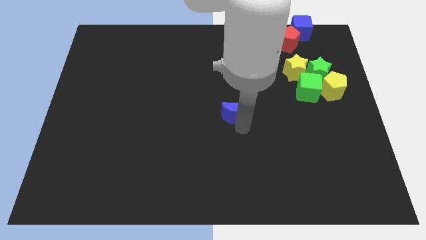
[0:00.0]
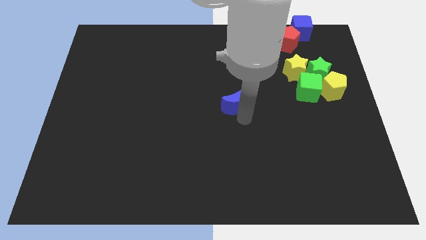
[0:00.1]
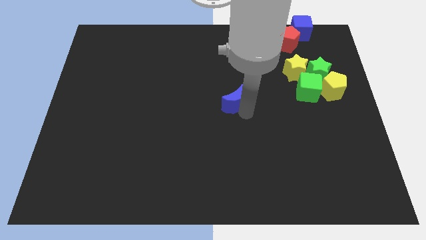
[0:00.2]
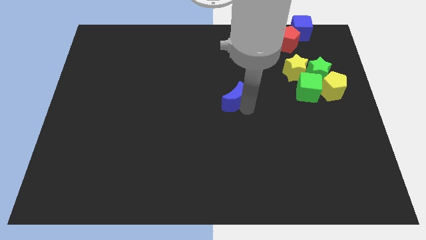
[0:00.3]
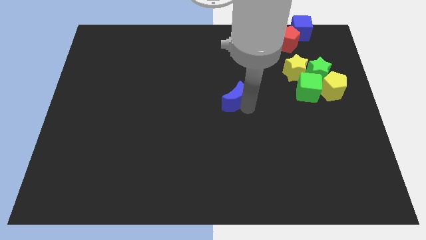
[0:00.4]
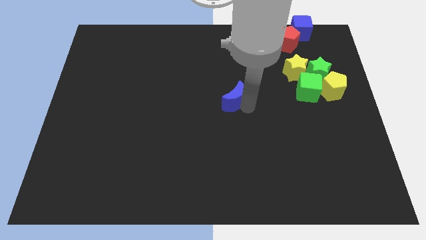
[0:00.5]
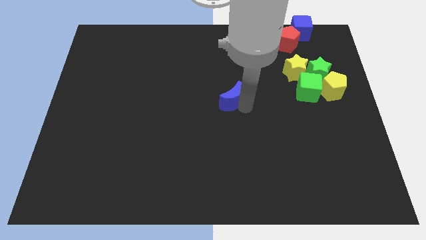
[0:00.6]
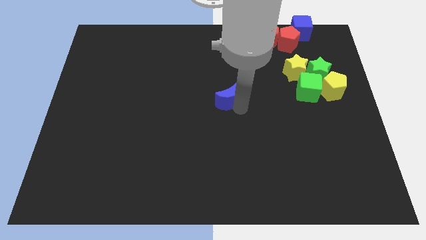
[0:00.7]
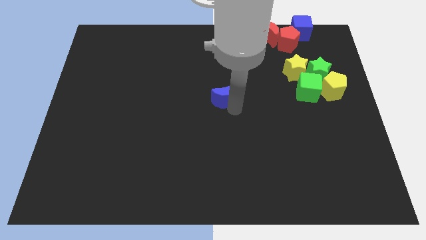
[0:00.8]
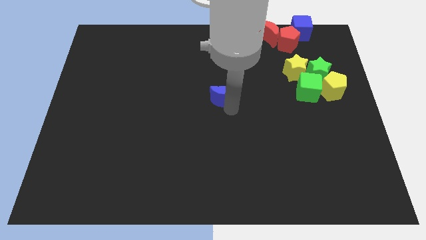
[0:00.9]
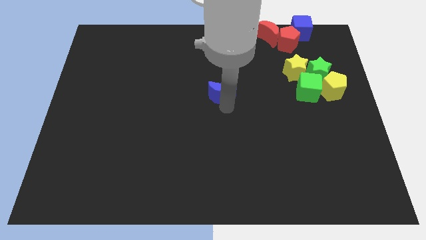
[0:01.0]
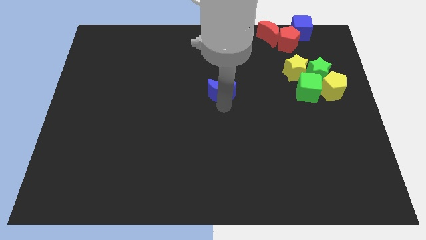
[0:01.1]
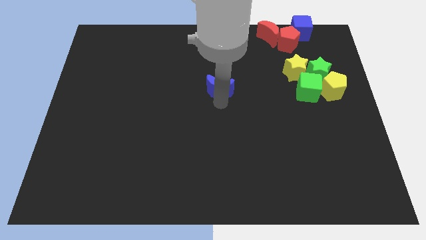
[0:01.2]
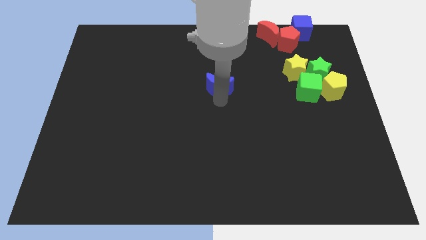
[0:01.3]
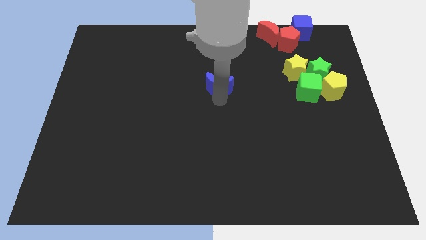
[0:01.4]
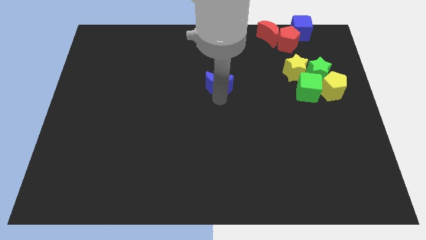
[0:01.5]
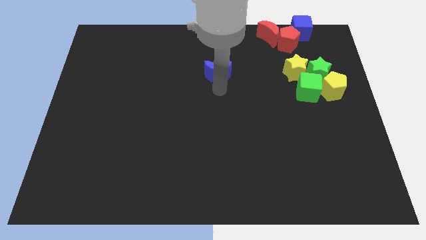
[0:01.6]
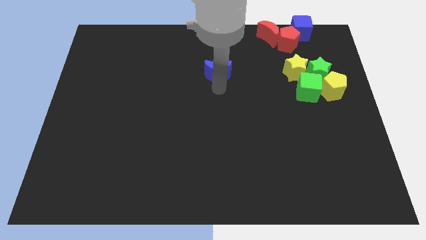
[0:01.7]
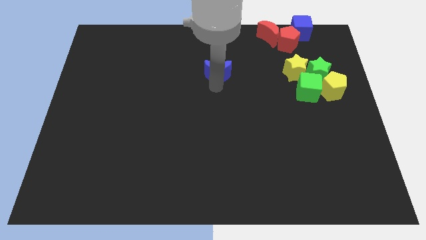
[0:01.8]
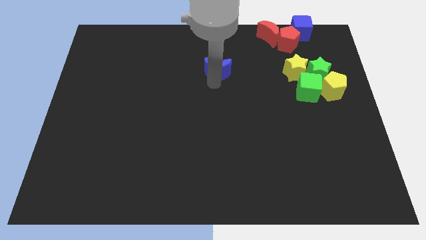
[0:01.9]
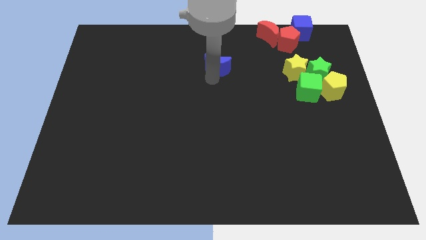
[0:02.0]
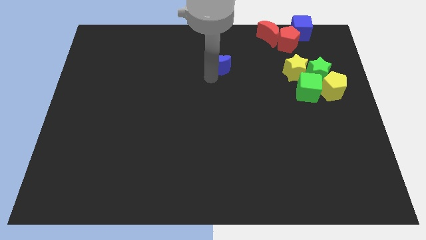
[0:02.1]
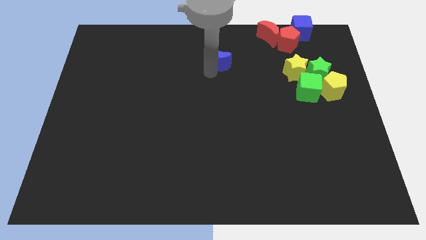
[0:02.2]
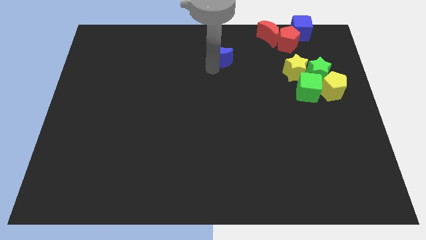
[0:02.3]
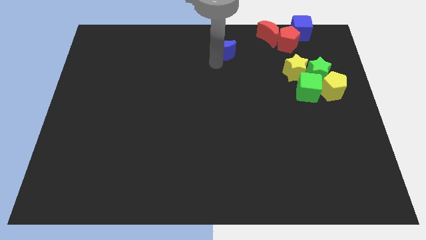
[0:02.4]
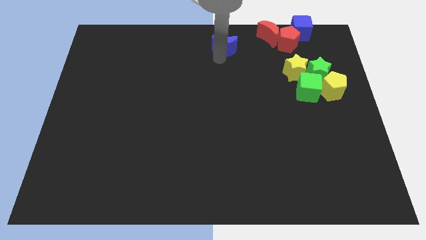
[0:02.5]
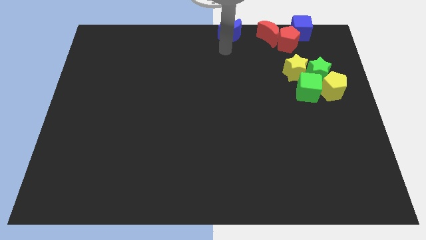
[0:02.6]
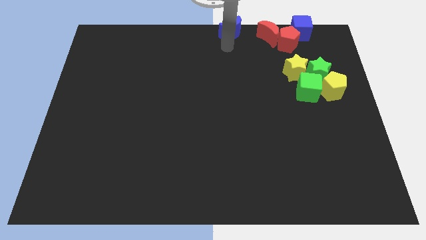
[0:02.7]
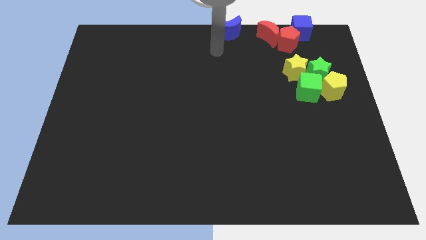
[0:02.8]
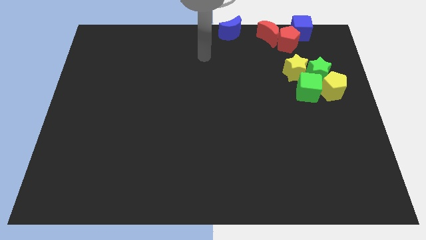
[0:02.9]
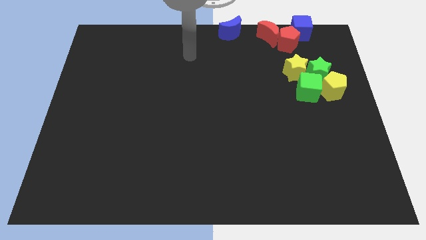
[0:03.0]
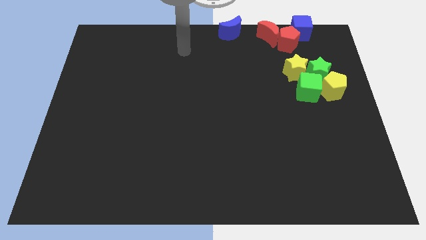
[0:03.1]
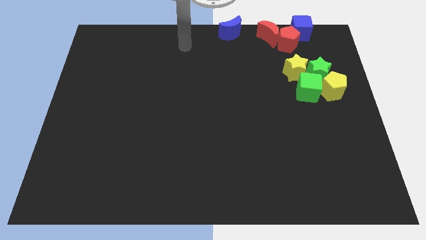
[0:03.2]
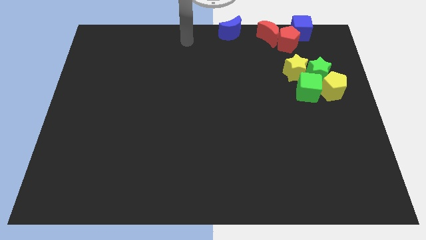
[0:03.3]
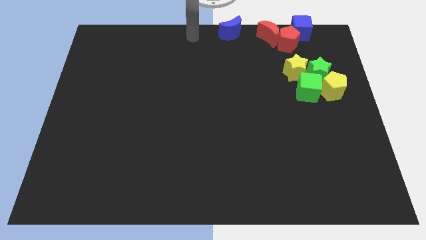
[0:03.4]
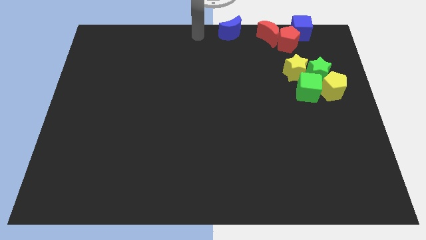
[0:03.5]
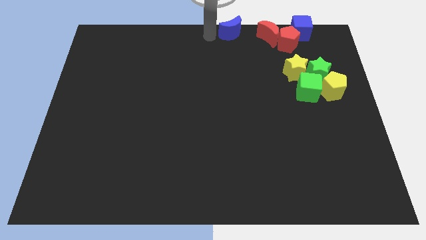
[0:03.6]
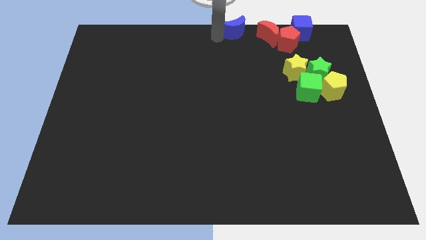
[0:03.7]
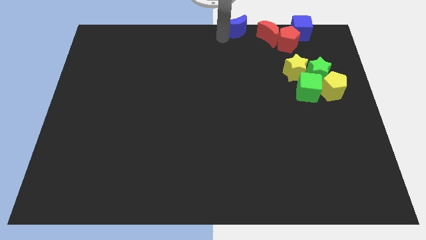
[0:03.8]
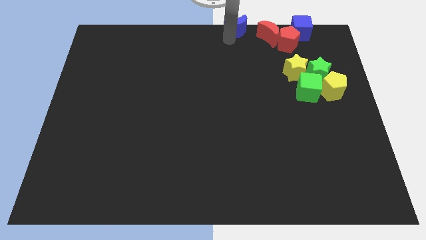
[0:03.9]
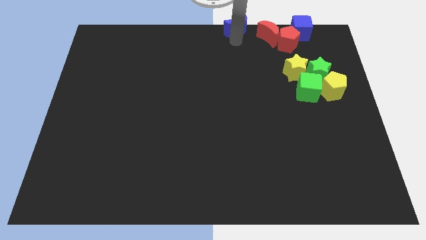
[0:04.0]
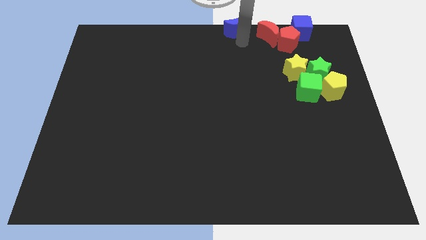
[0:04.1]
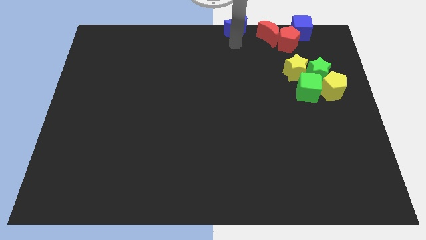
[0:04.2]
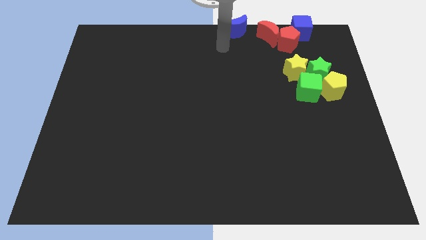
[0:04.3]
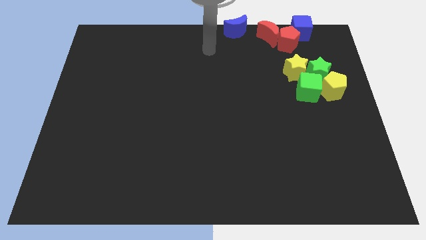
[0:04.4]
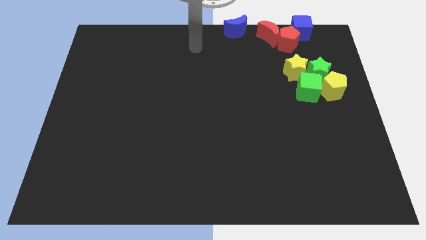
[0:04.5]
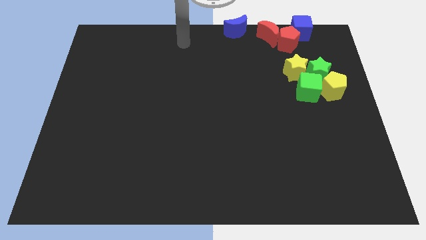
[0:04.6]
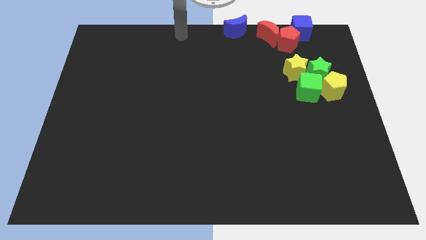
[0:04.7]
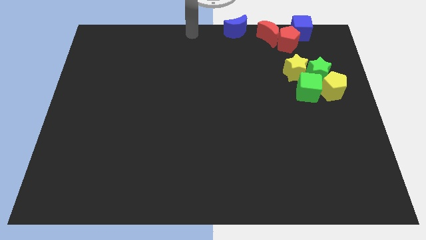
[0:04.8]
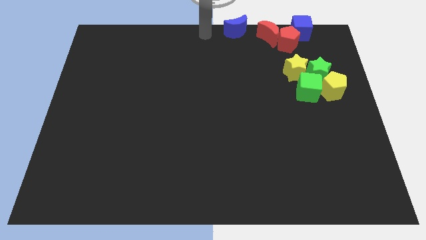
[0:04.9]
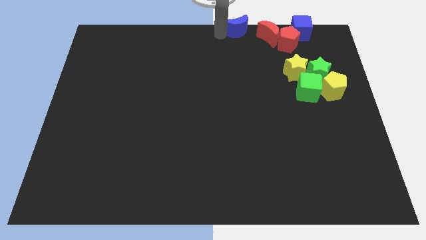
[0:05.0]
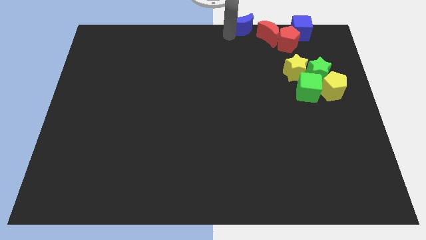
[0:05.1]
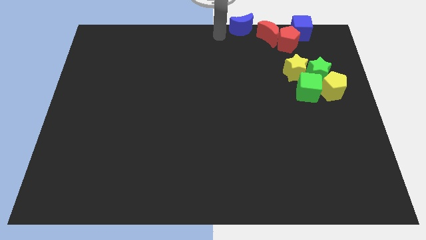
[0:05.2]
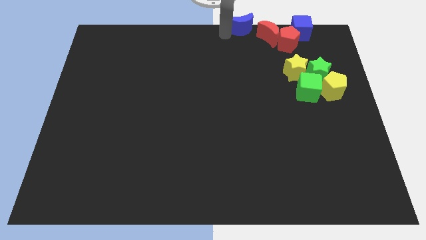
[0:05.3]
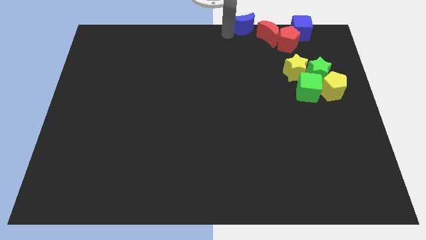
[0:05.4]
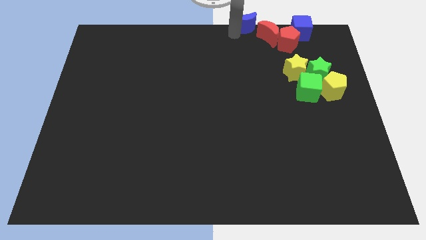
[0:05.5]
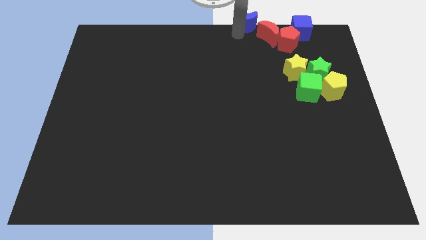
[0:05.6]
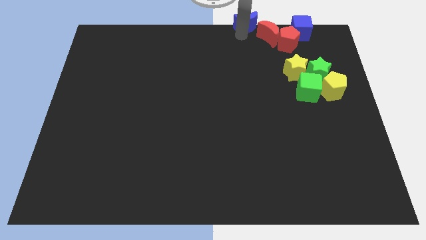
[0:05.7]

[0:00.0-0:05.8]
place blue crescent into group of blocks

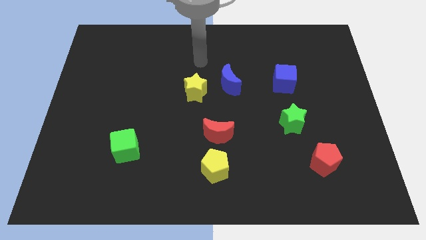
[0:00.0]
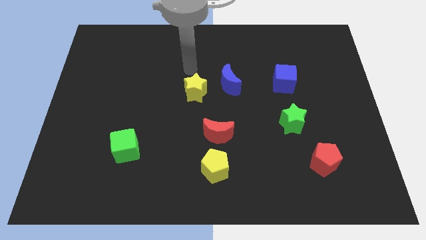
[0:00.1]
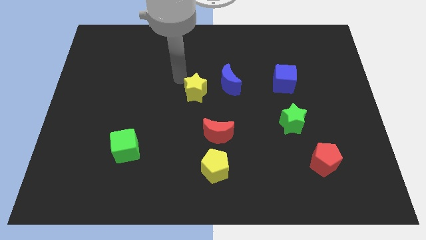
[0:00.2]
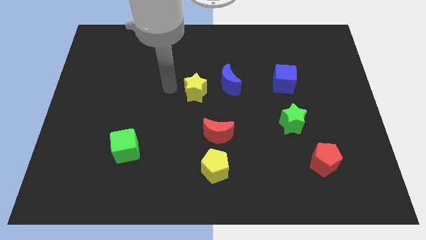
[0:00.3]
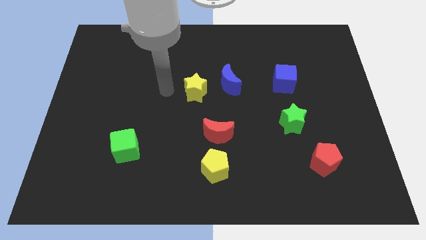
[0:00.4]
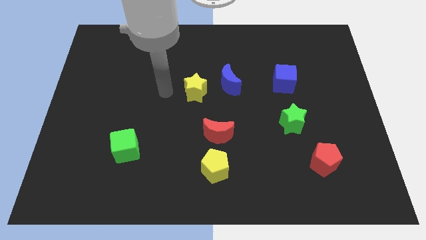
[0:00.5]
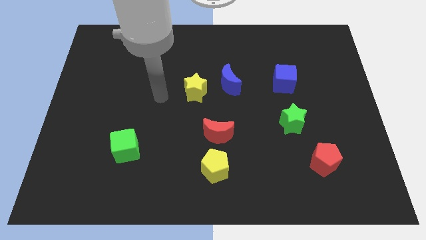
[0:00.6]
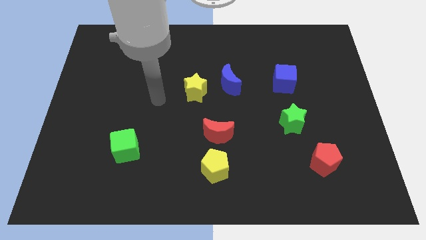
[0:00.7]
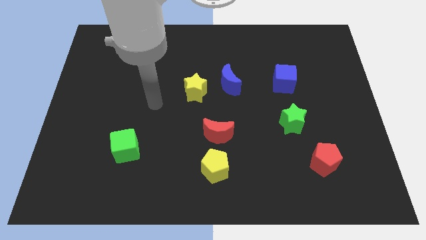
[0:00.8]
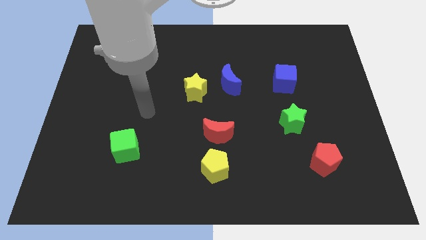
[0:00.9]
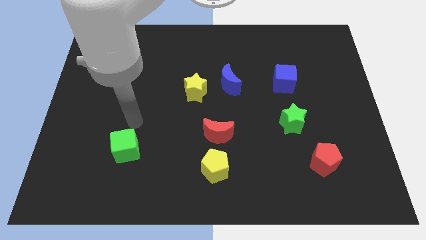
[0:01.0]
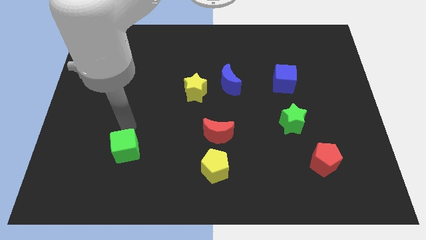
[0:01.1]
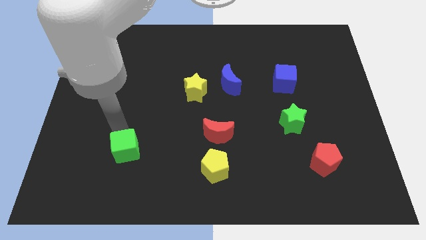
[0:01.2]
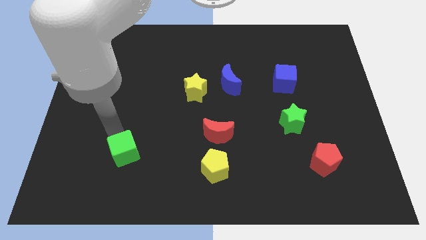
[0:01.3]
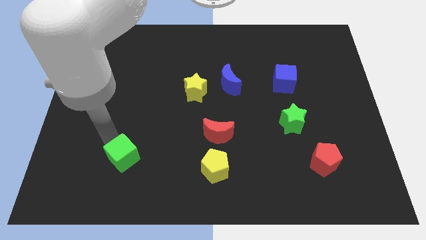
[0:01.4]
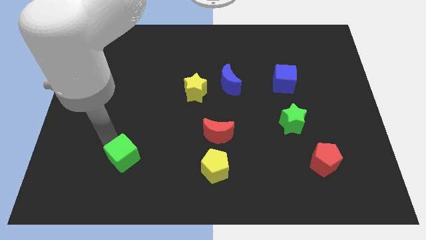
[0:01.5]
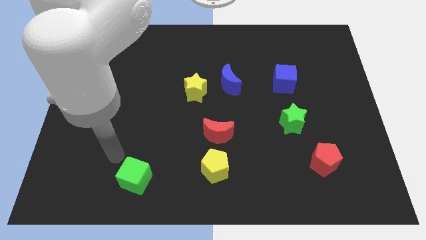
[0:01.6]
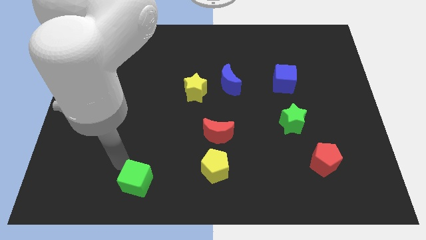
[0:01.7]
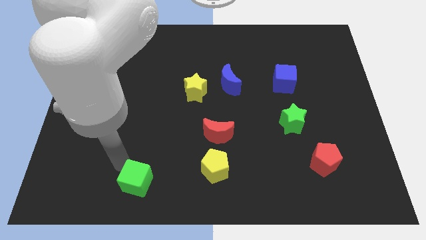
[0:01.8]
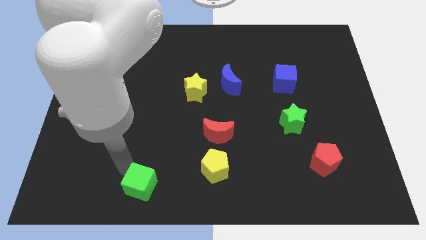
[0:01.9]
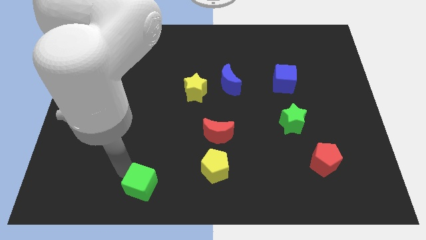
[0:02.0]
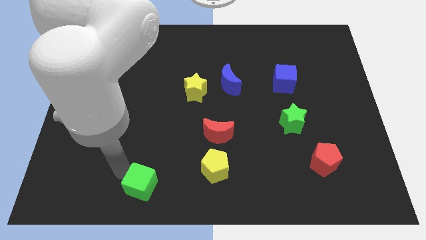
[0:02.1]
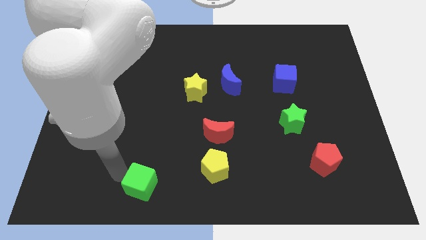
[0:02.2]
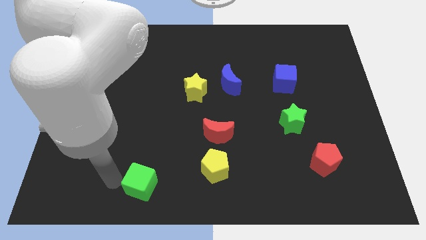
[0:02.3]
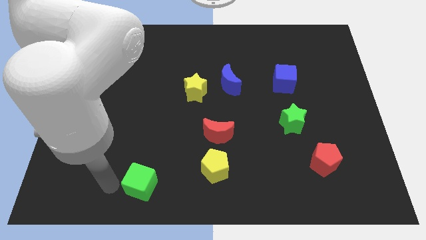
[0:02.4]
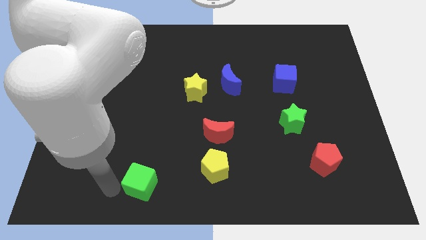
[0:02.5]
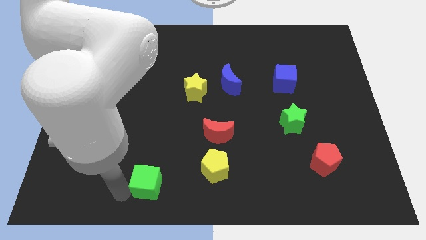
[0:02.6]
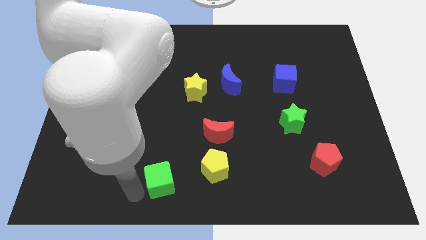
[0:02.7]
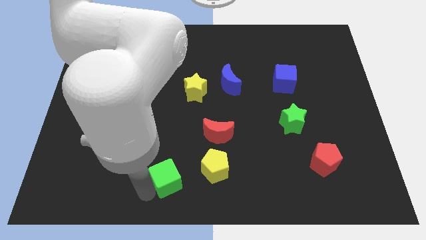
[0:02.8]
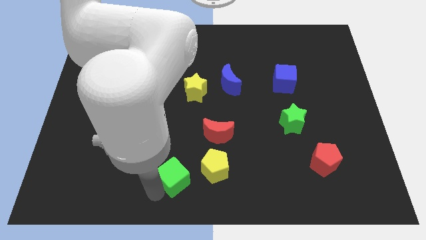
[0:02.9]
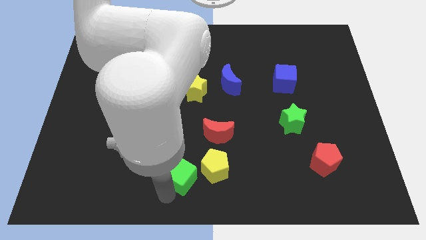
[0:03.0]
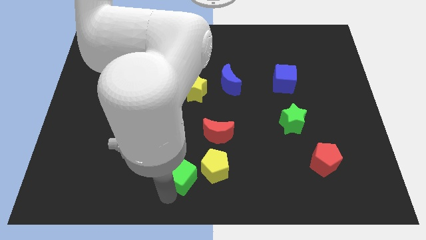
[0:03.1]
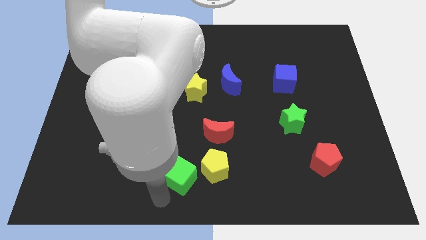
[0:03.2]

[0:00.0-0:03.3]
place green cube left to the yellow pentagon
